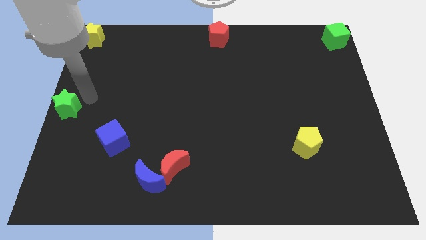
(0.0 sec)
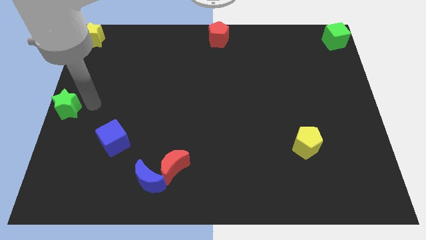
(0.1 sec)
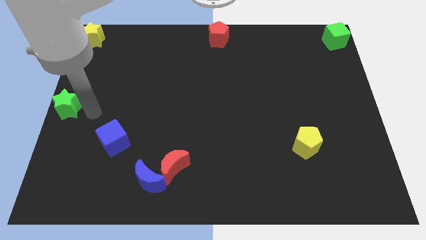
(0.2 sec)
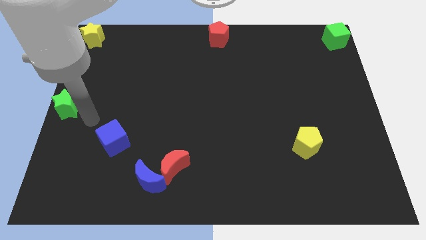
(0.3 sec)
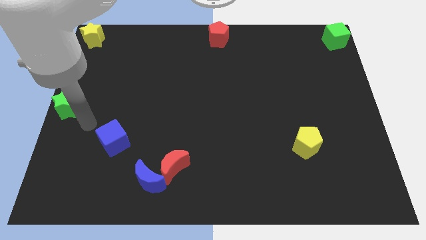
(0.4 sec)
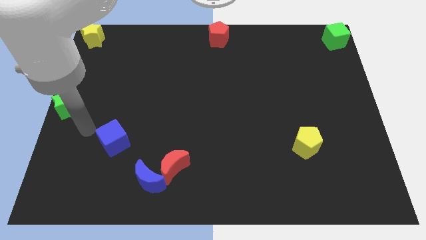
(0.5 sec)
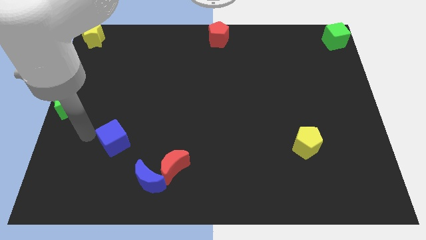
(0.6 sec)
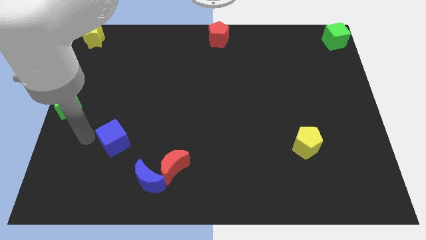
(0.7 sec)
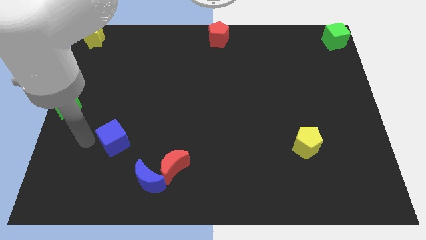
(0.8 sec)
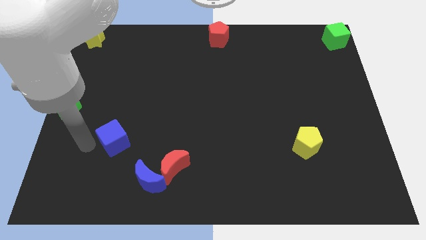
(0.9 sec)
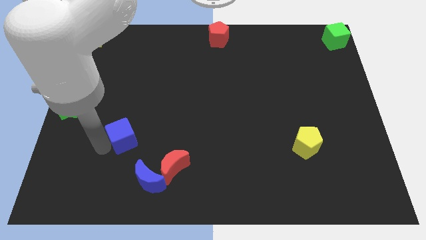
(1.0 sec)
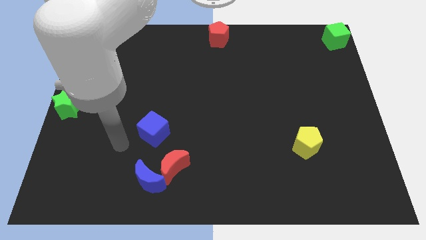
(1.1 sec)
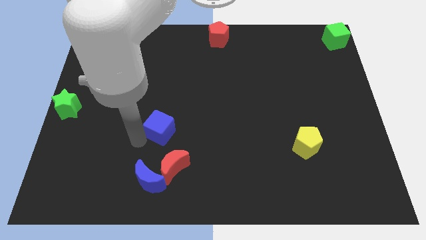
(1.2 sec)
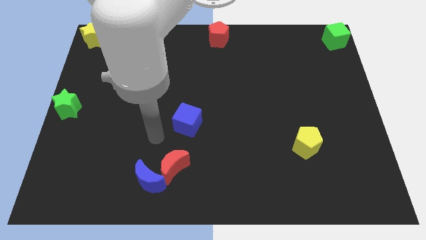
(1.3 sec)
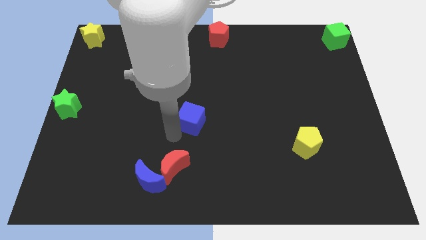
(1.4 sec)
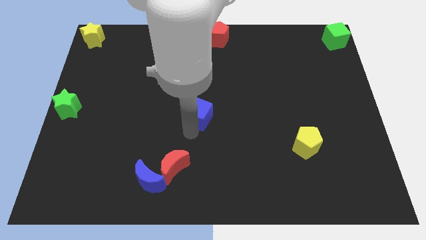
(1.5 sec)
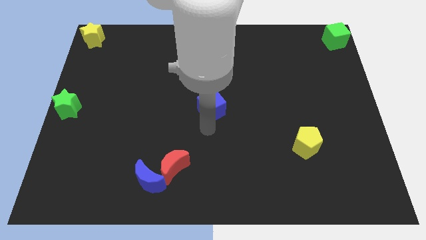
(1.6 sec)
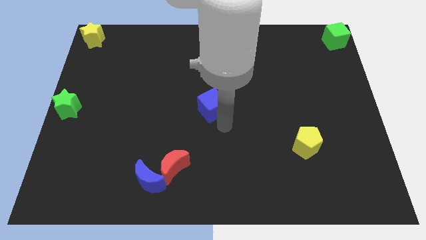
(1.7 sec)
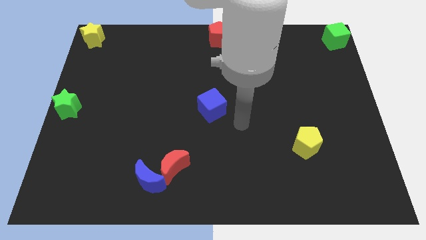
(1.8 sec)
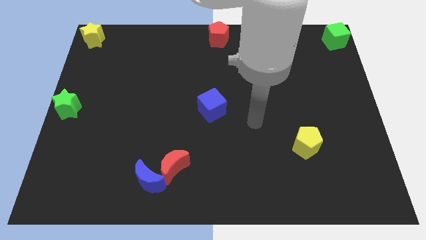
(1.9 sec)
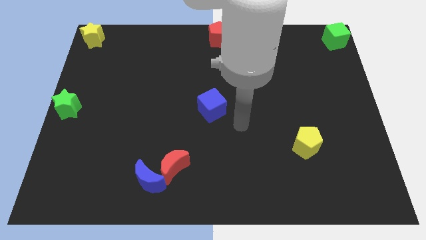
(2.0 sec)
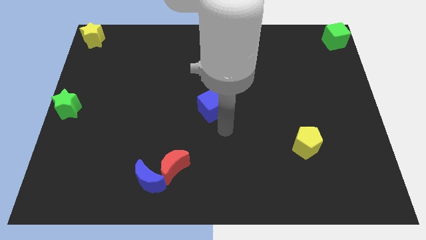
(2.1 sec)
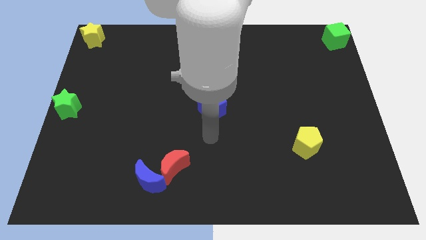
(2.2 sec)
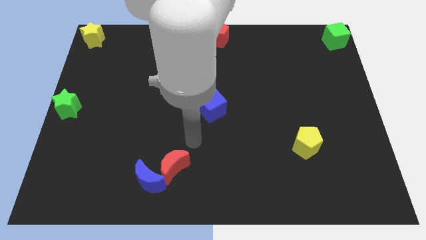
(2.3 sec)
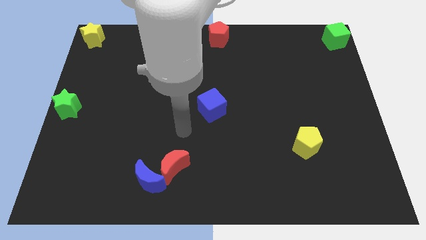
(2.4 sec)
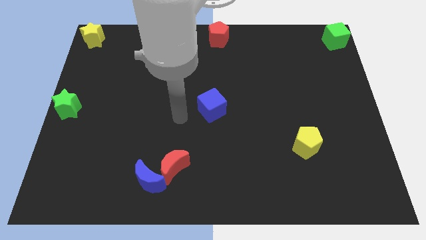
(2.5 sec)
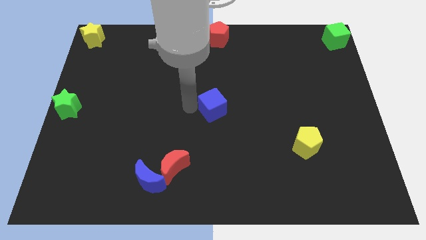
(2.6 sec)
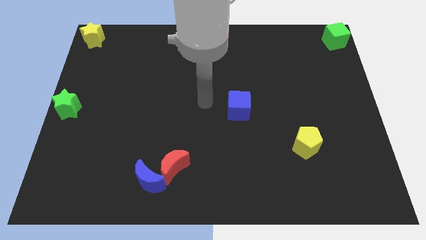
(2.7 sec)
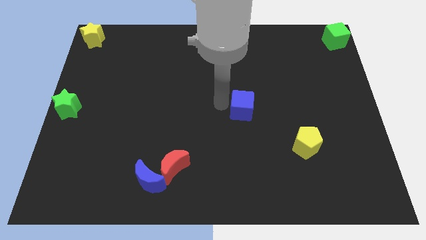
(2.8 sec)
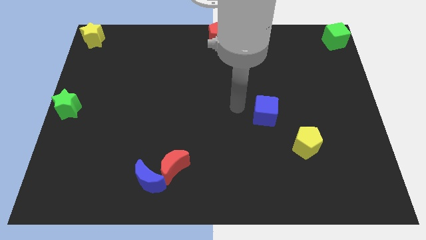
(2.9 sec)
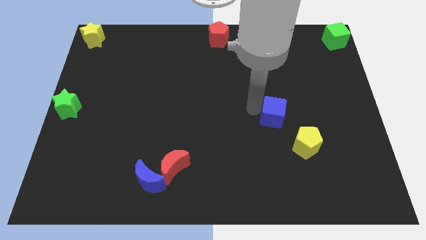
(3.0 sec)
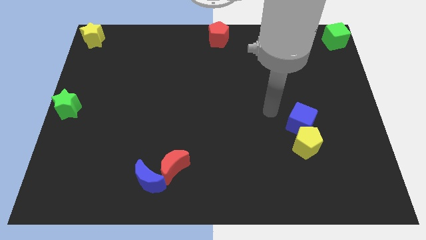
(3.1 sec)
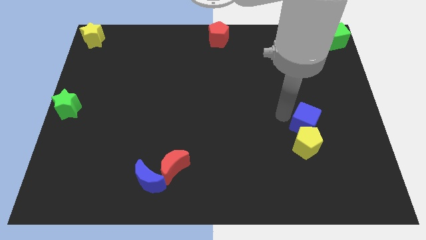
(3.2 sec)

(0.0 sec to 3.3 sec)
place the blue cube above the yellow pentagon

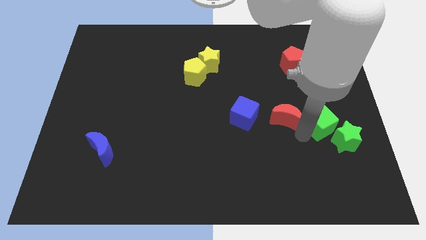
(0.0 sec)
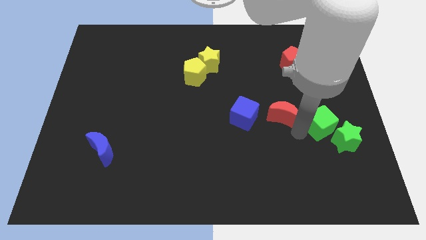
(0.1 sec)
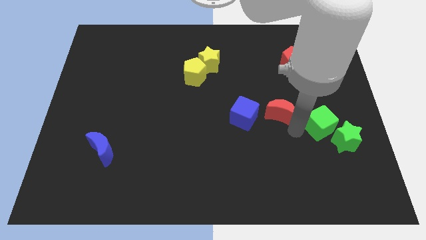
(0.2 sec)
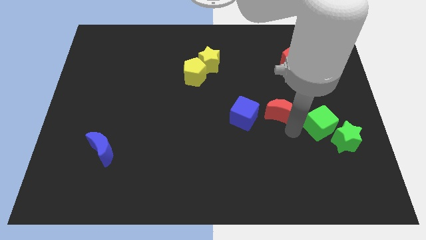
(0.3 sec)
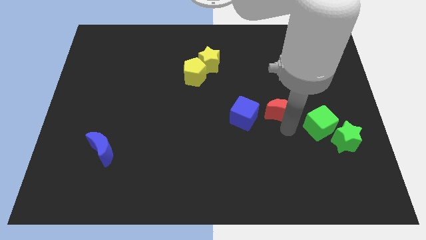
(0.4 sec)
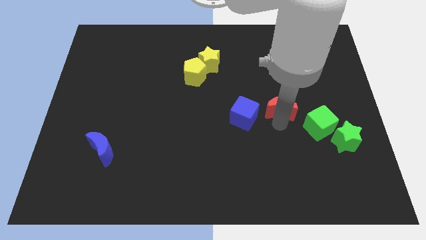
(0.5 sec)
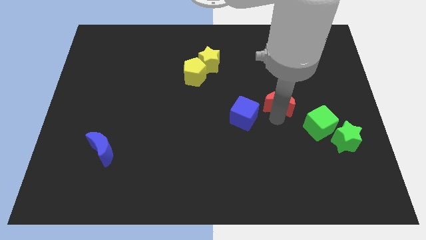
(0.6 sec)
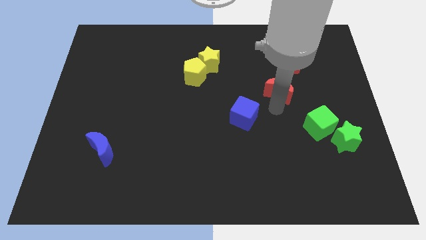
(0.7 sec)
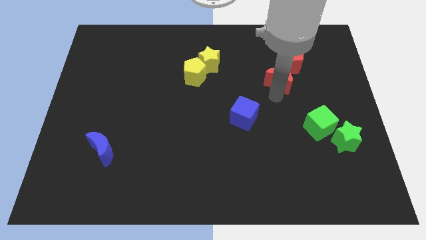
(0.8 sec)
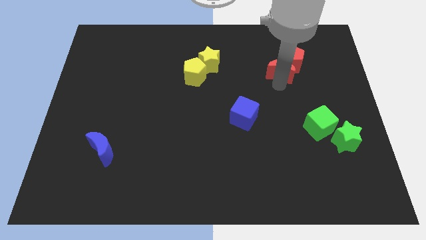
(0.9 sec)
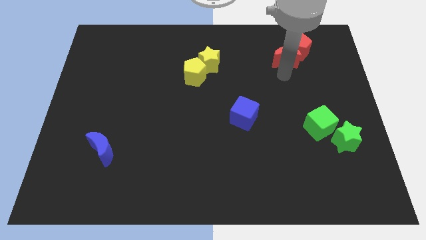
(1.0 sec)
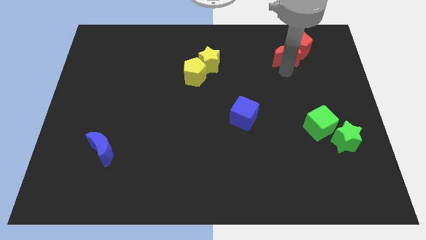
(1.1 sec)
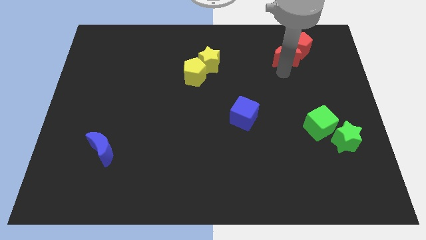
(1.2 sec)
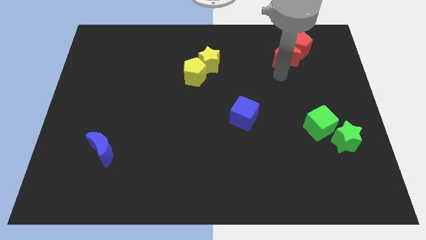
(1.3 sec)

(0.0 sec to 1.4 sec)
push the red moon into the red pentagon

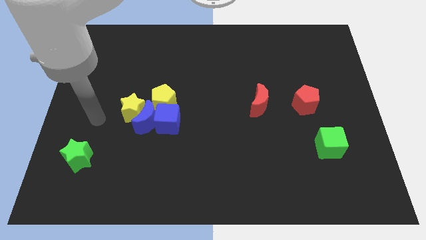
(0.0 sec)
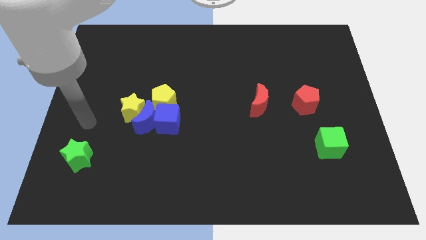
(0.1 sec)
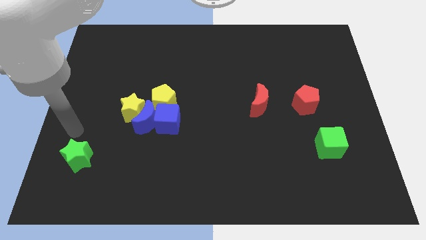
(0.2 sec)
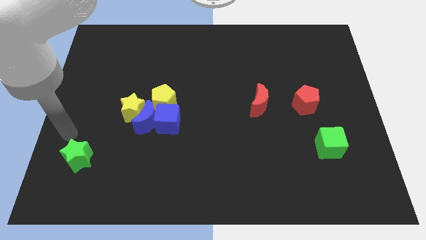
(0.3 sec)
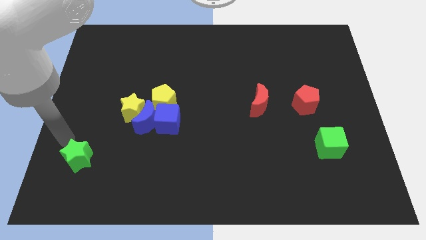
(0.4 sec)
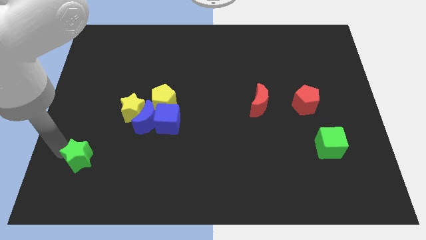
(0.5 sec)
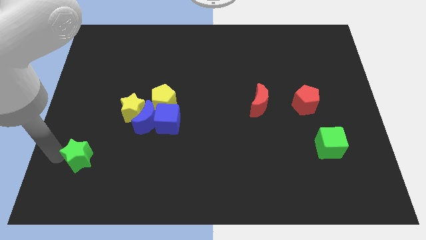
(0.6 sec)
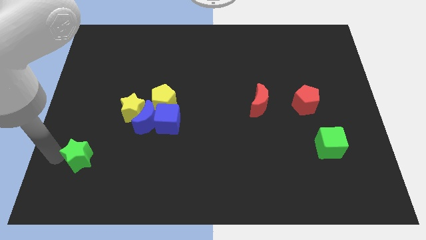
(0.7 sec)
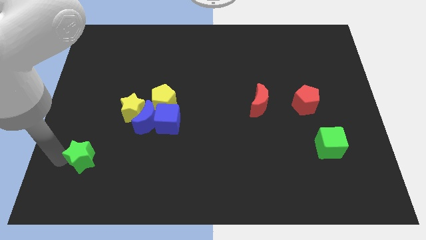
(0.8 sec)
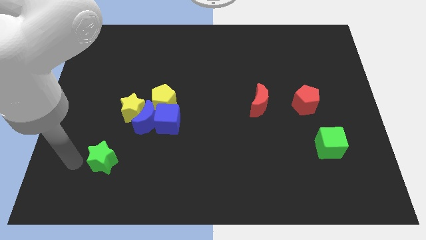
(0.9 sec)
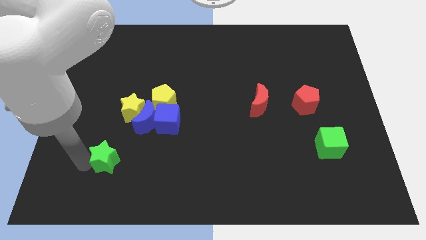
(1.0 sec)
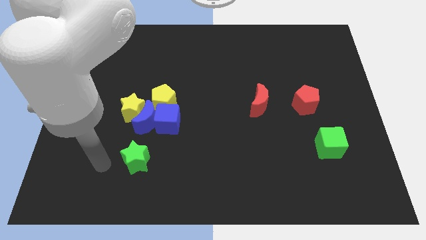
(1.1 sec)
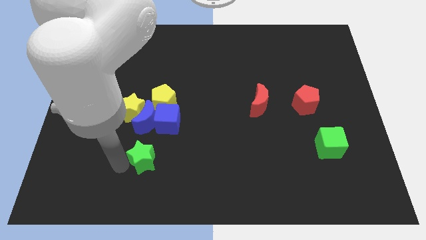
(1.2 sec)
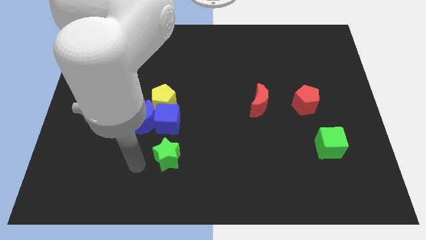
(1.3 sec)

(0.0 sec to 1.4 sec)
move the green star to the rigth of the board

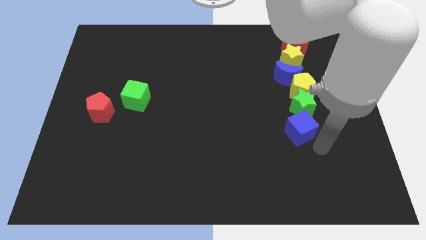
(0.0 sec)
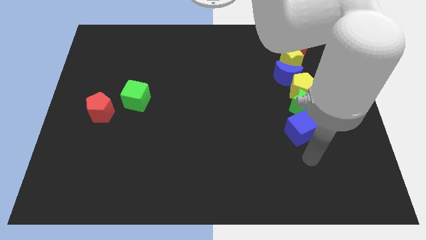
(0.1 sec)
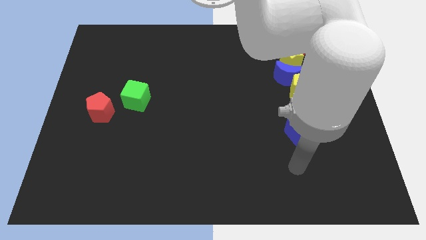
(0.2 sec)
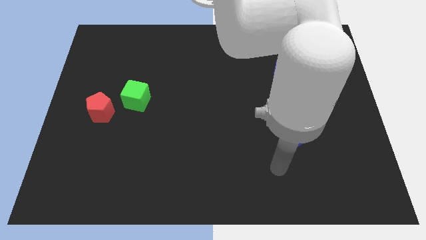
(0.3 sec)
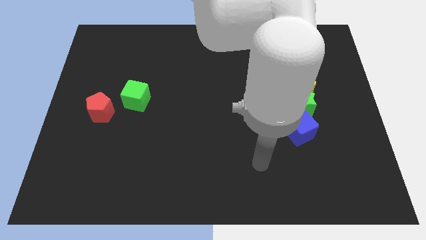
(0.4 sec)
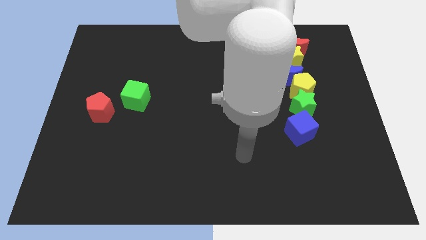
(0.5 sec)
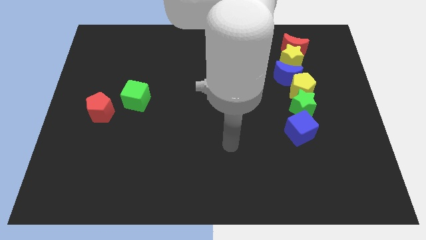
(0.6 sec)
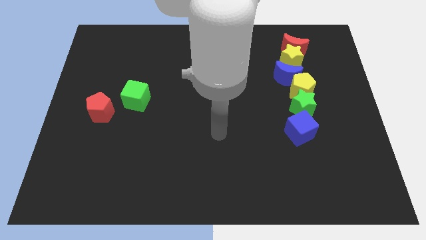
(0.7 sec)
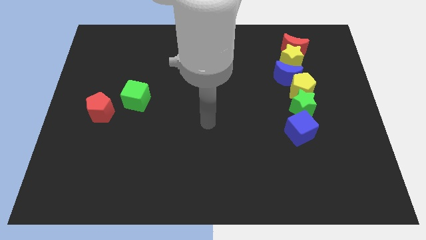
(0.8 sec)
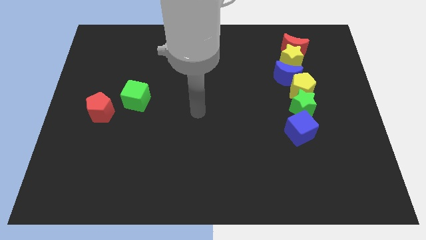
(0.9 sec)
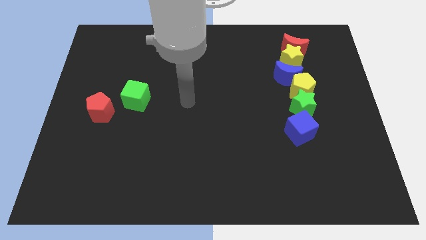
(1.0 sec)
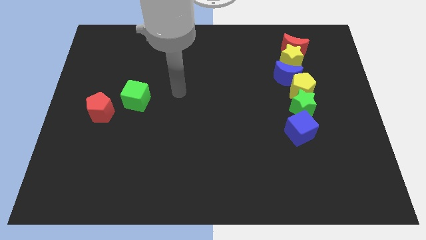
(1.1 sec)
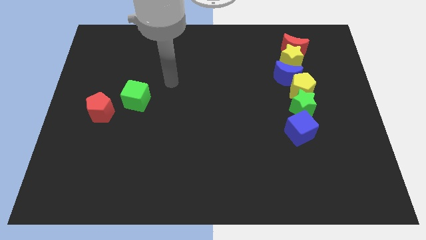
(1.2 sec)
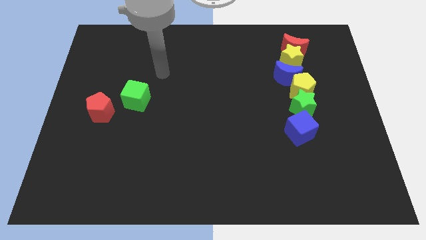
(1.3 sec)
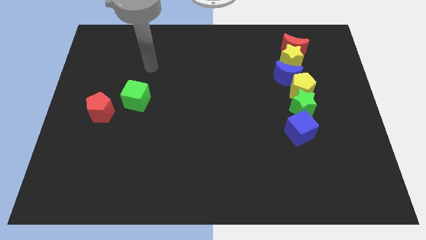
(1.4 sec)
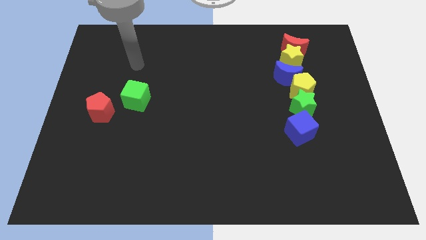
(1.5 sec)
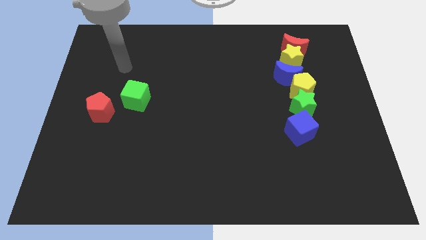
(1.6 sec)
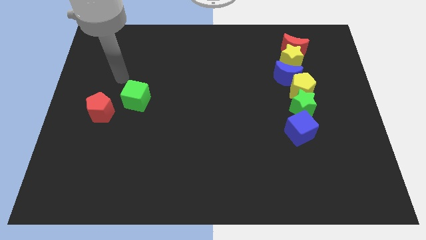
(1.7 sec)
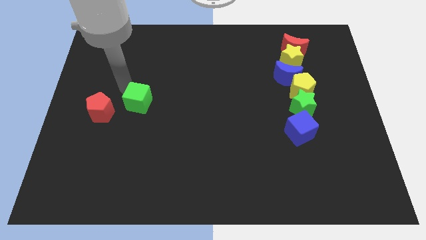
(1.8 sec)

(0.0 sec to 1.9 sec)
place your arm to the top left side of the green cube

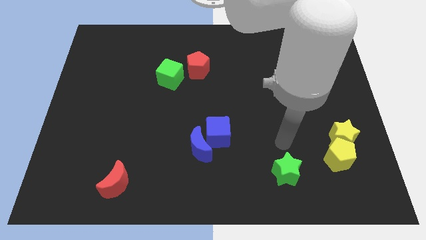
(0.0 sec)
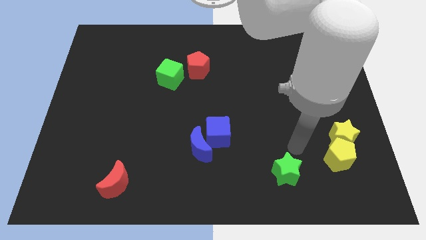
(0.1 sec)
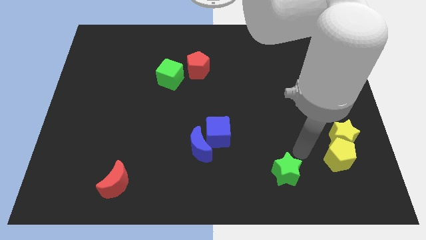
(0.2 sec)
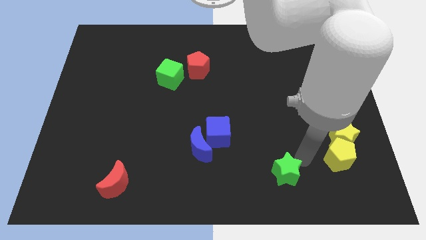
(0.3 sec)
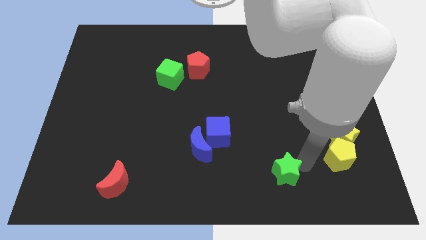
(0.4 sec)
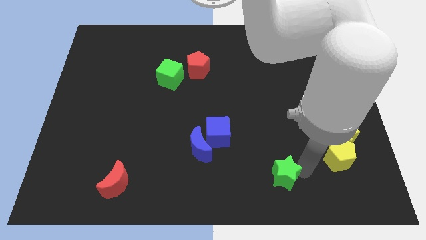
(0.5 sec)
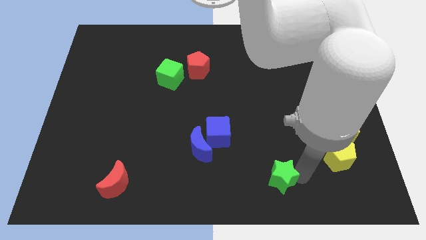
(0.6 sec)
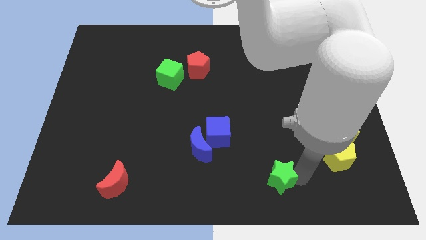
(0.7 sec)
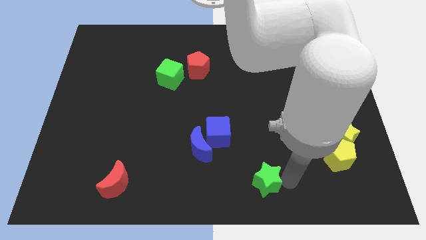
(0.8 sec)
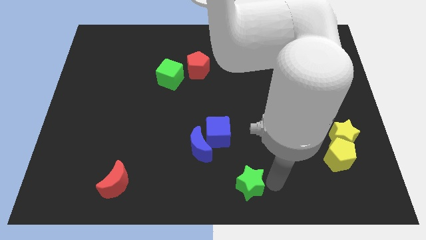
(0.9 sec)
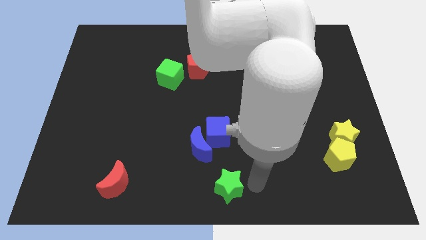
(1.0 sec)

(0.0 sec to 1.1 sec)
push the green star to the bottom center of the board
